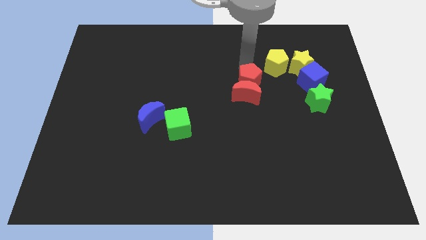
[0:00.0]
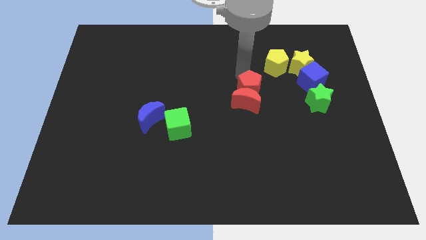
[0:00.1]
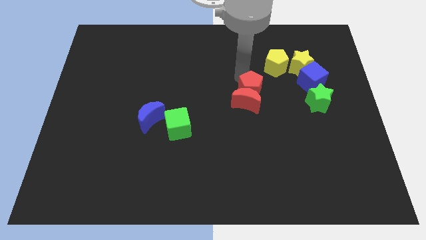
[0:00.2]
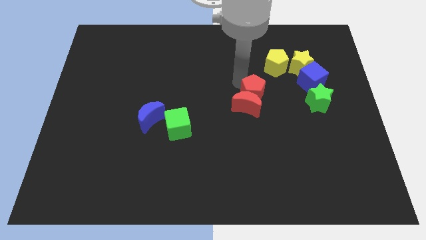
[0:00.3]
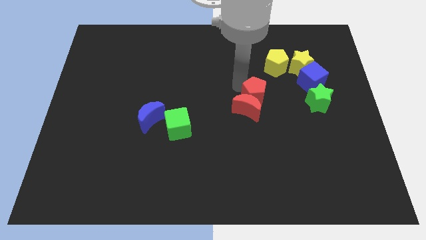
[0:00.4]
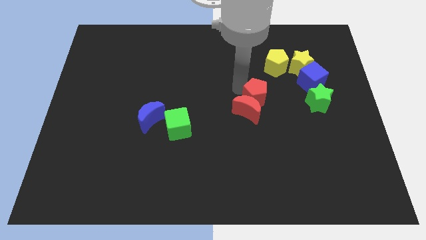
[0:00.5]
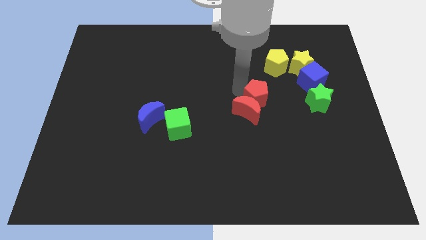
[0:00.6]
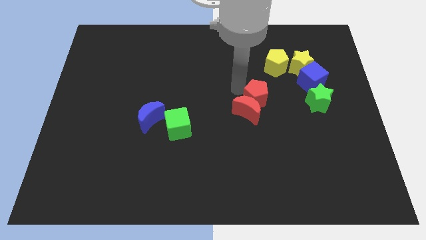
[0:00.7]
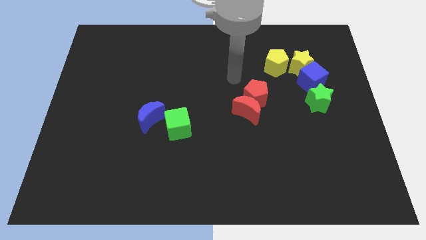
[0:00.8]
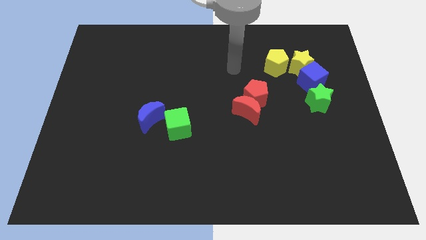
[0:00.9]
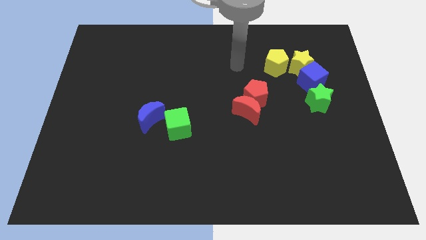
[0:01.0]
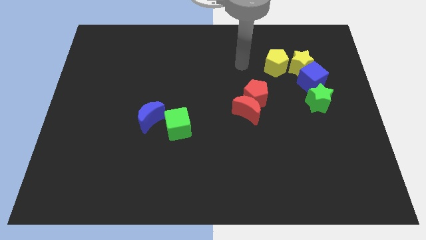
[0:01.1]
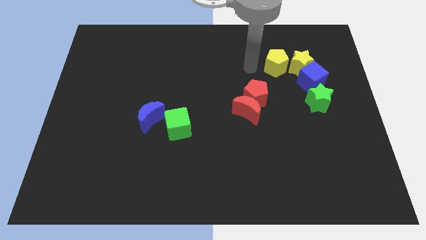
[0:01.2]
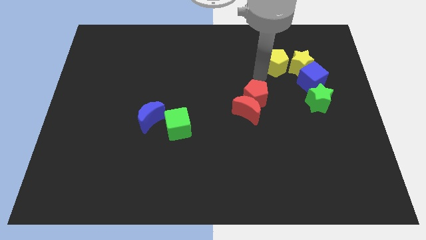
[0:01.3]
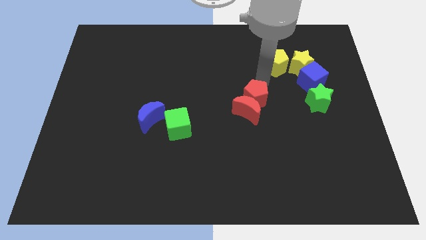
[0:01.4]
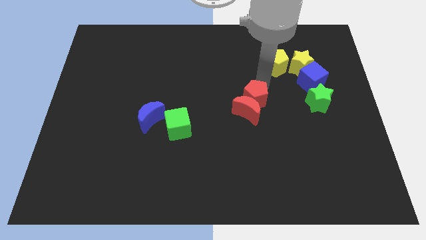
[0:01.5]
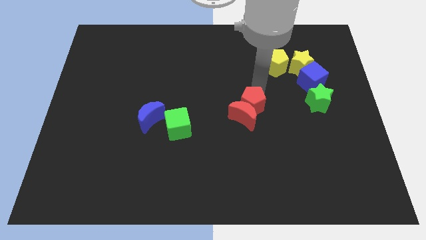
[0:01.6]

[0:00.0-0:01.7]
push the red blocks slightly to the bottom

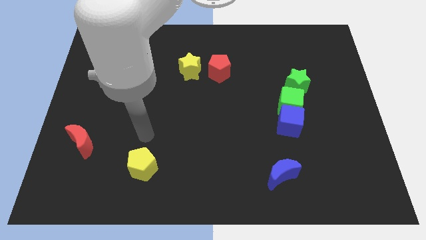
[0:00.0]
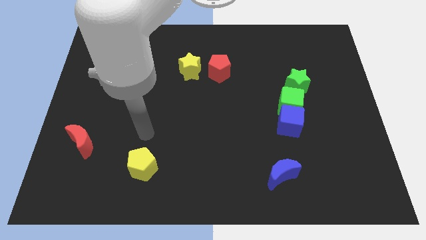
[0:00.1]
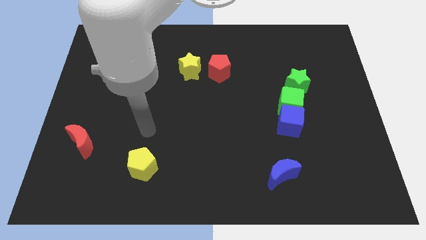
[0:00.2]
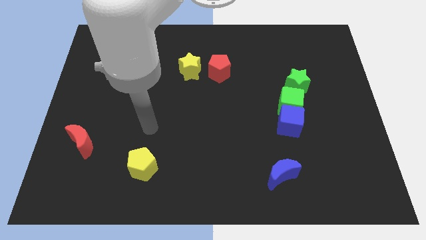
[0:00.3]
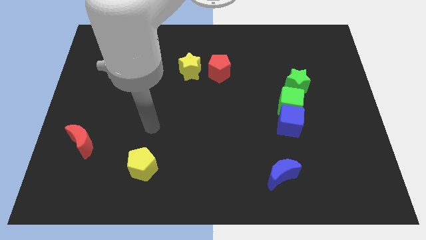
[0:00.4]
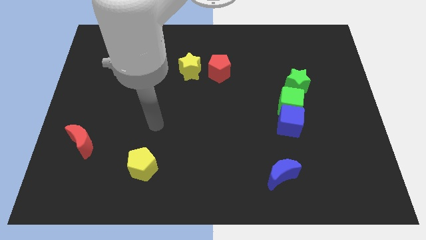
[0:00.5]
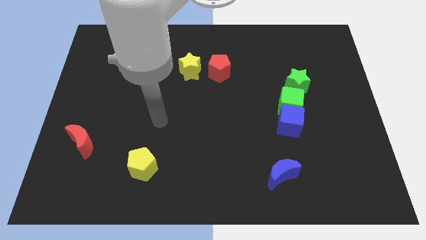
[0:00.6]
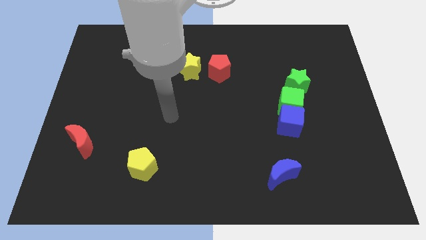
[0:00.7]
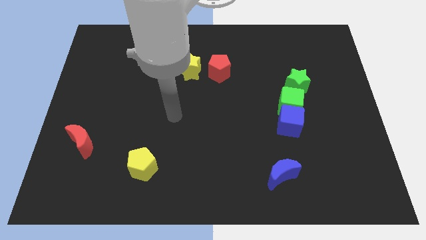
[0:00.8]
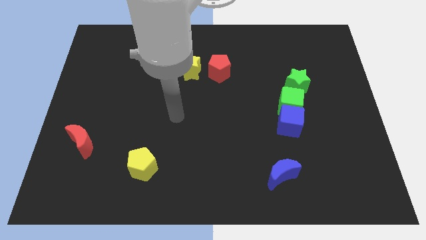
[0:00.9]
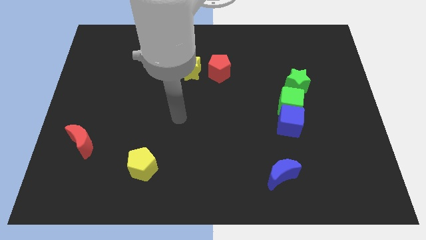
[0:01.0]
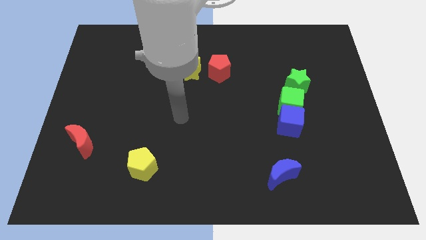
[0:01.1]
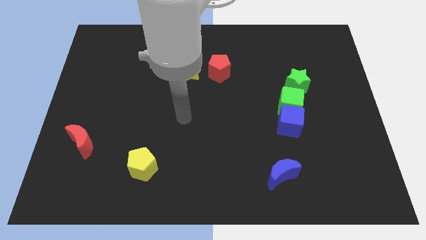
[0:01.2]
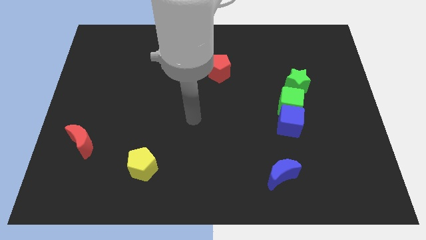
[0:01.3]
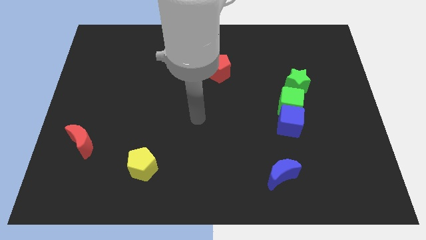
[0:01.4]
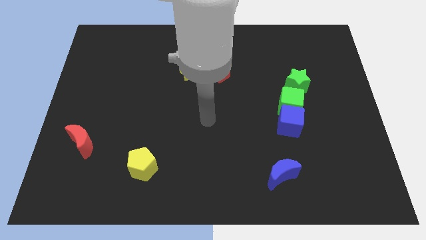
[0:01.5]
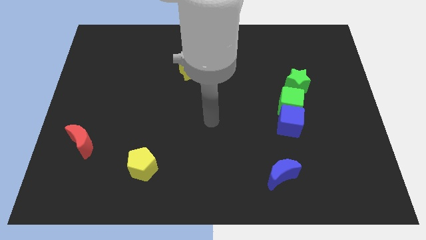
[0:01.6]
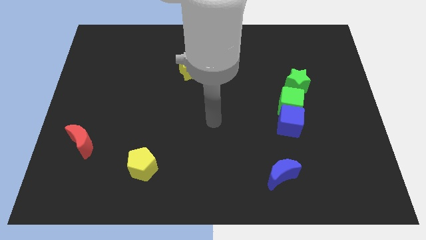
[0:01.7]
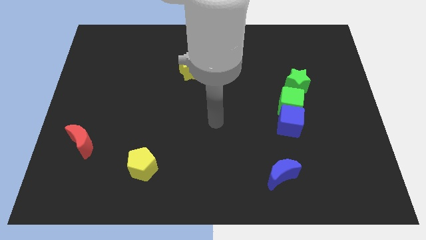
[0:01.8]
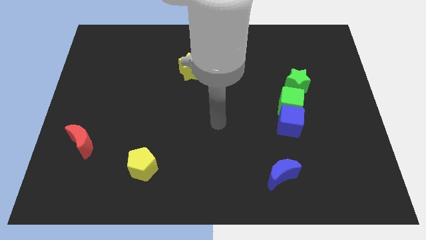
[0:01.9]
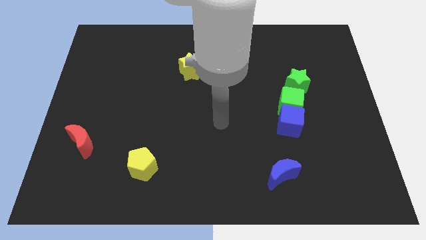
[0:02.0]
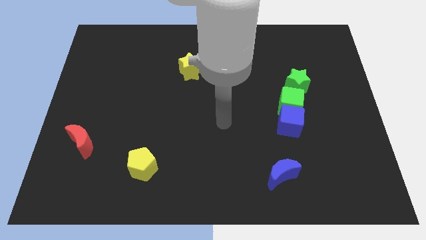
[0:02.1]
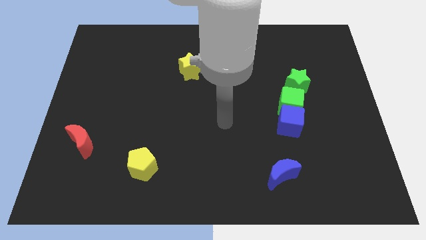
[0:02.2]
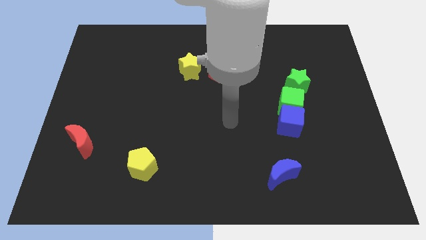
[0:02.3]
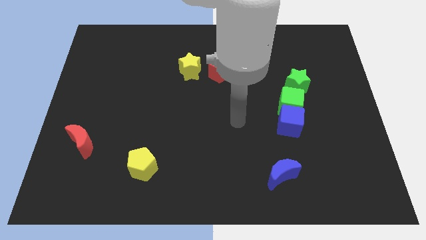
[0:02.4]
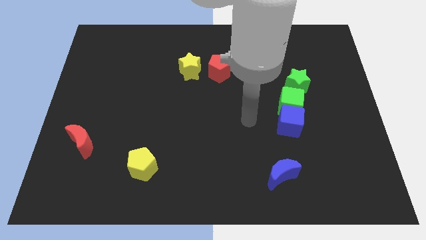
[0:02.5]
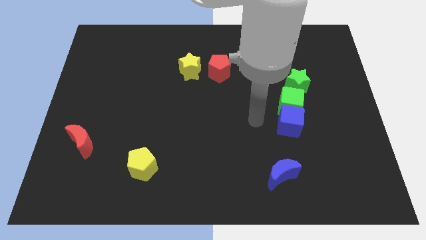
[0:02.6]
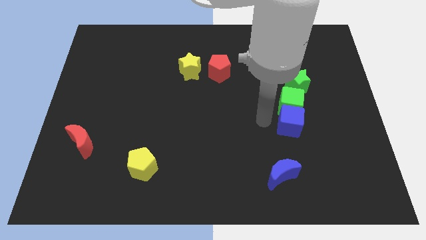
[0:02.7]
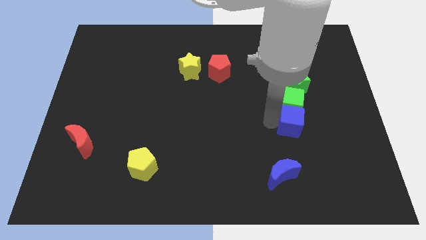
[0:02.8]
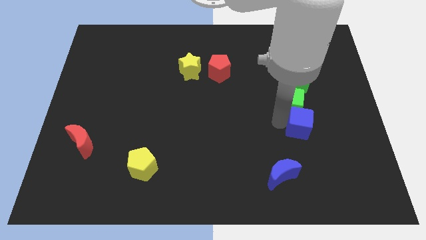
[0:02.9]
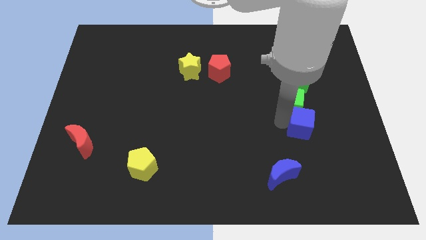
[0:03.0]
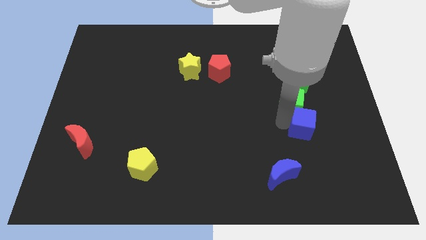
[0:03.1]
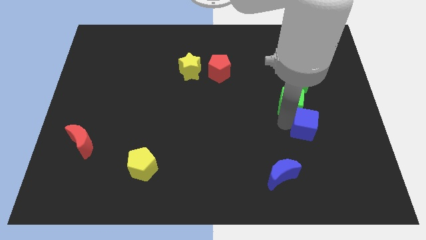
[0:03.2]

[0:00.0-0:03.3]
push the blue cube slightly to the right

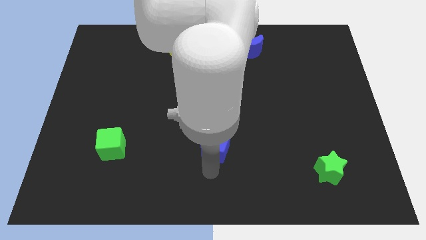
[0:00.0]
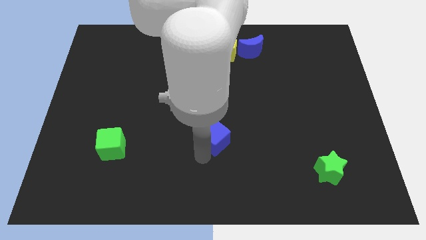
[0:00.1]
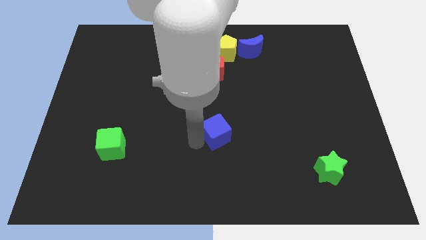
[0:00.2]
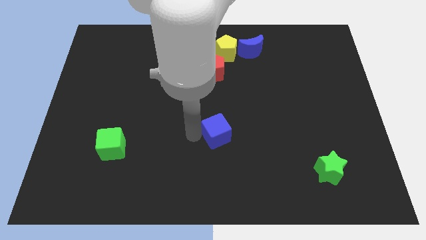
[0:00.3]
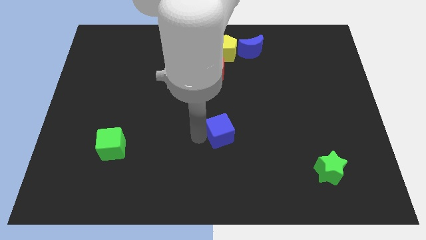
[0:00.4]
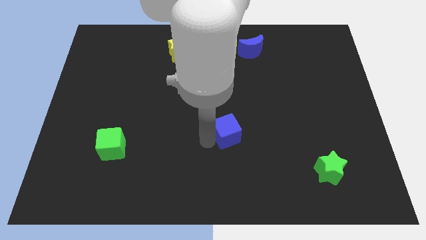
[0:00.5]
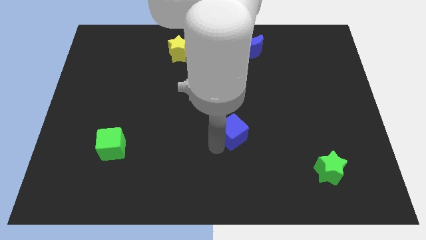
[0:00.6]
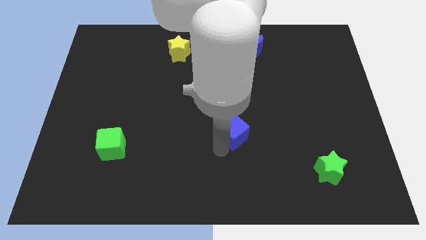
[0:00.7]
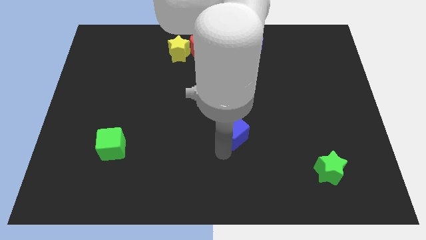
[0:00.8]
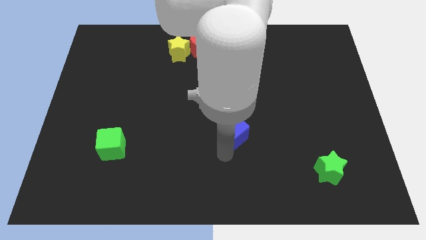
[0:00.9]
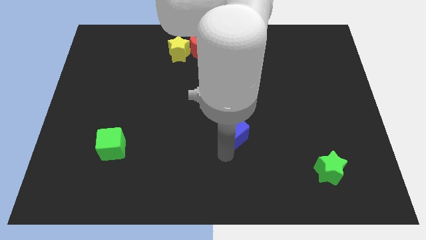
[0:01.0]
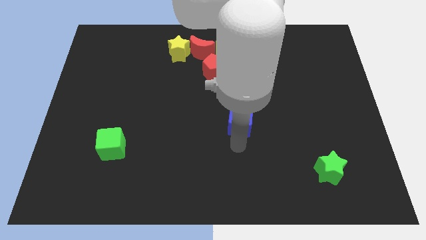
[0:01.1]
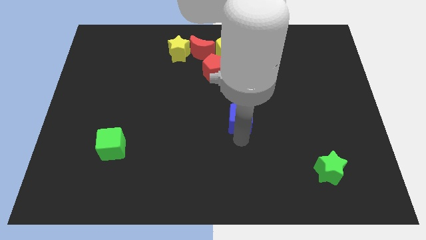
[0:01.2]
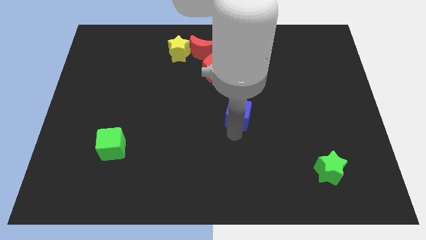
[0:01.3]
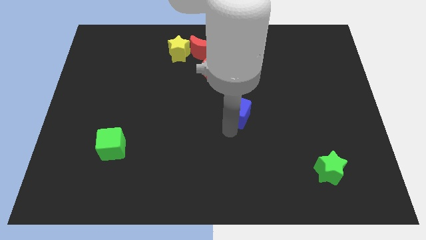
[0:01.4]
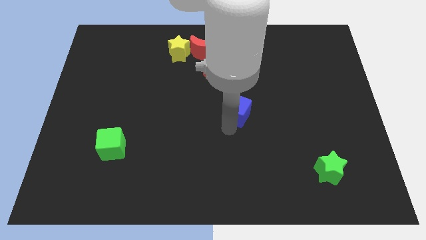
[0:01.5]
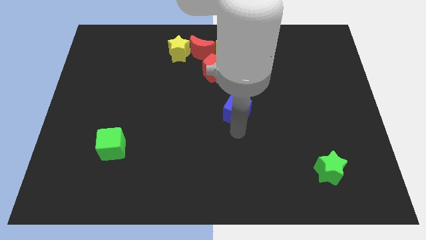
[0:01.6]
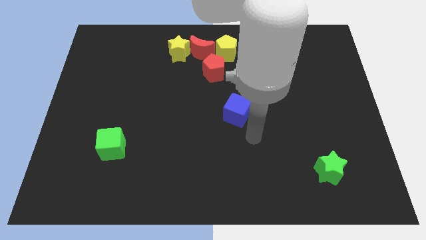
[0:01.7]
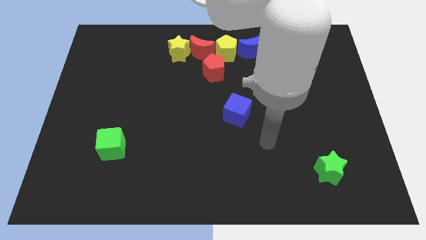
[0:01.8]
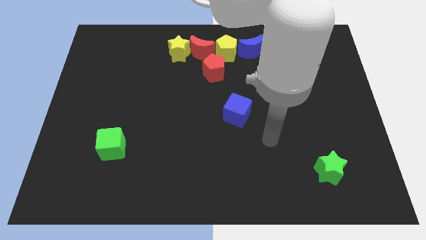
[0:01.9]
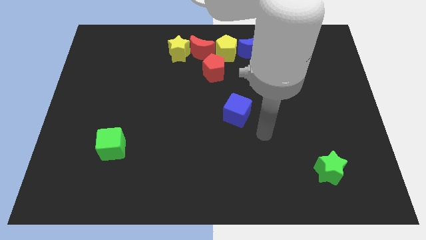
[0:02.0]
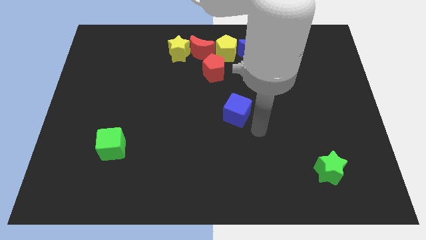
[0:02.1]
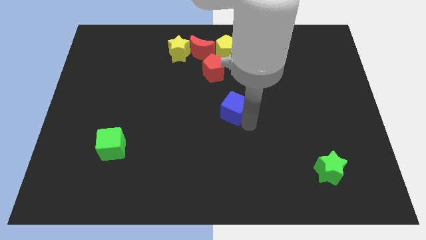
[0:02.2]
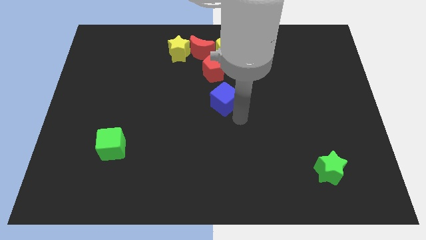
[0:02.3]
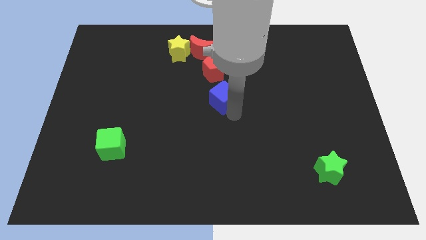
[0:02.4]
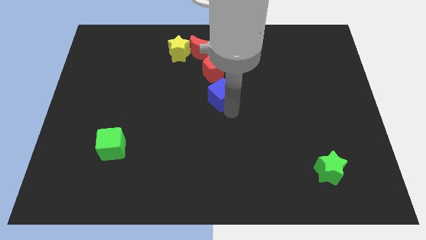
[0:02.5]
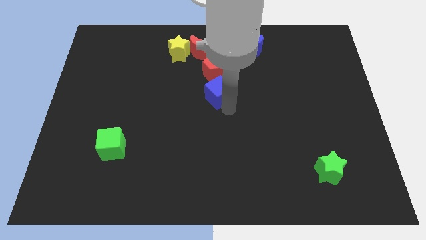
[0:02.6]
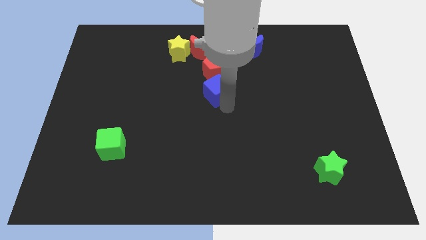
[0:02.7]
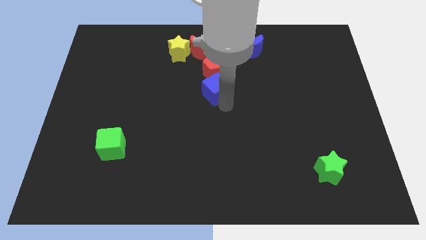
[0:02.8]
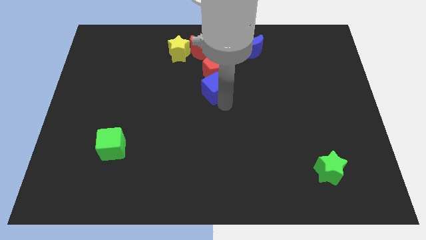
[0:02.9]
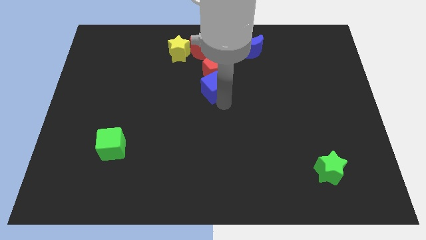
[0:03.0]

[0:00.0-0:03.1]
slide the blue cube in to red pentagon

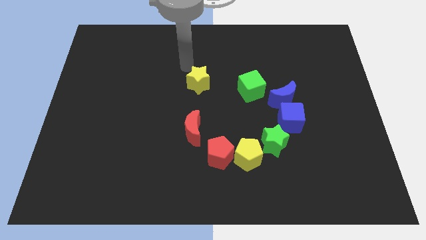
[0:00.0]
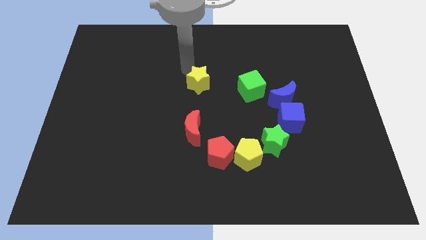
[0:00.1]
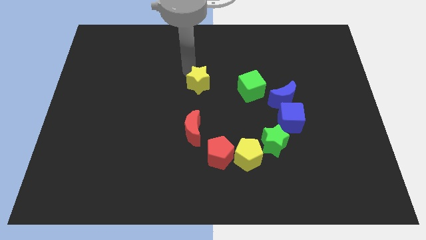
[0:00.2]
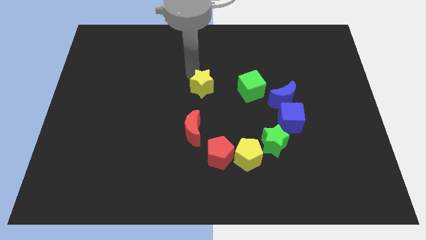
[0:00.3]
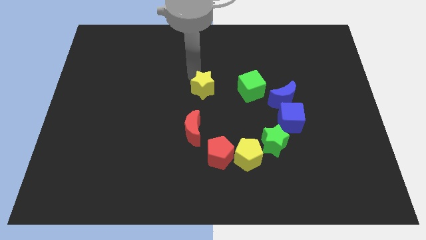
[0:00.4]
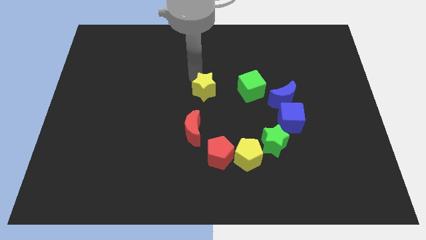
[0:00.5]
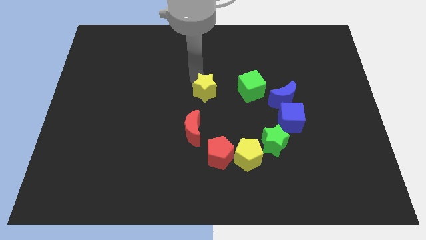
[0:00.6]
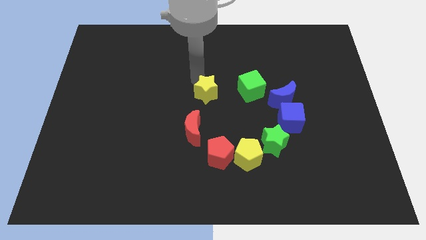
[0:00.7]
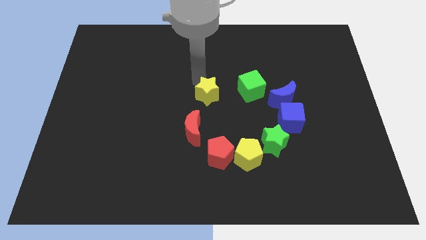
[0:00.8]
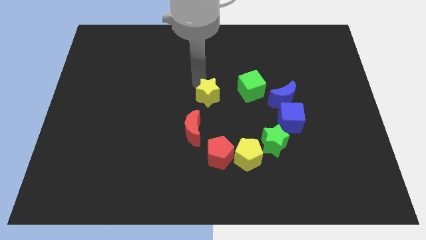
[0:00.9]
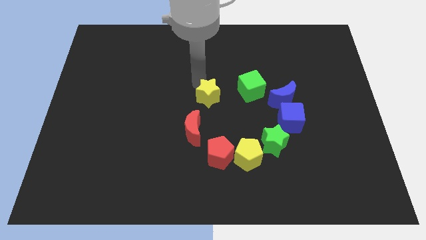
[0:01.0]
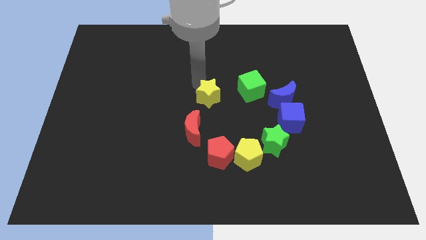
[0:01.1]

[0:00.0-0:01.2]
push the yellow star in between the red crescent and green cube to form a circle
